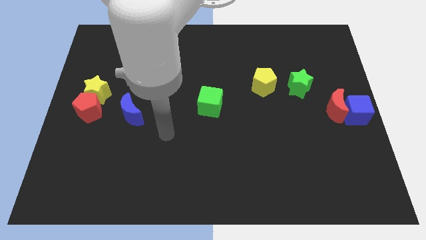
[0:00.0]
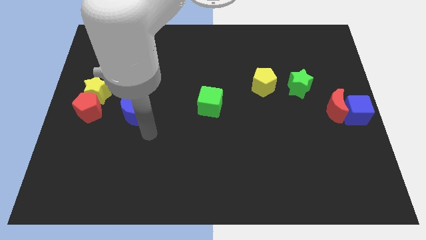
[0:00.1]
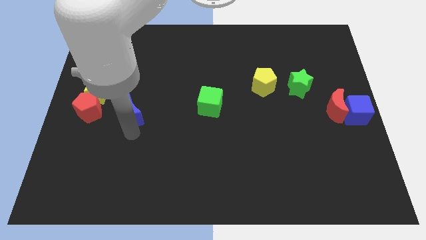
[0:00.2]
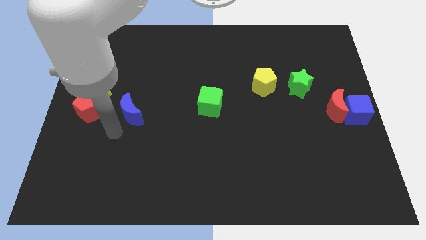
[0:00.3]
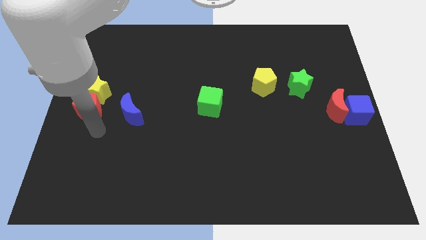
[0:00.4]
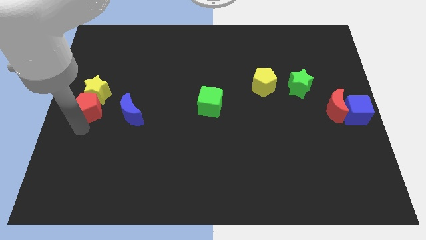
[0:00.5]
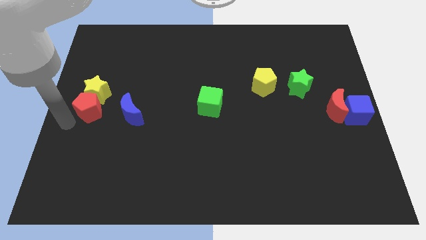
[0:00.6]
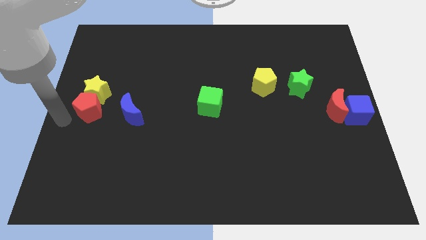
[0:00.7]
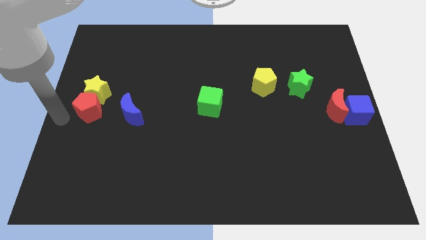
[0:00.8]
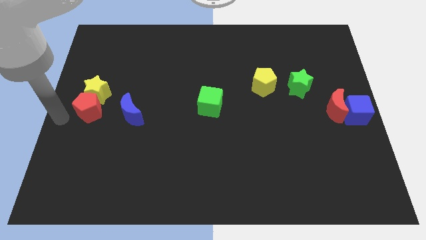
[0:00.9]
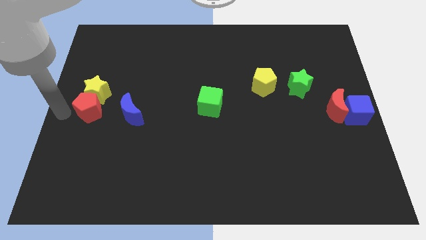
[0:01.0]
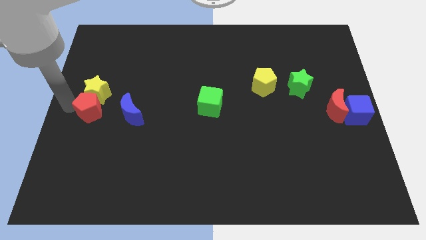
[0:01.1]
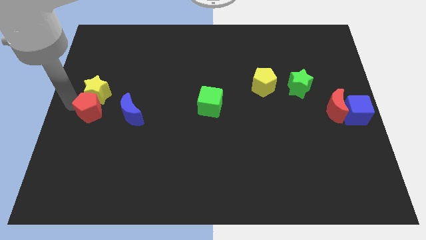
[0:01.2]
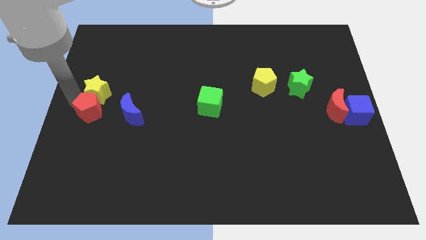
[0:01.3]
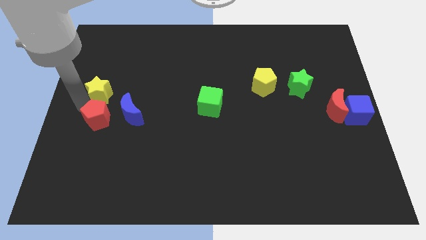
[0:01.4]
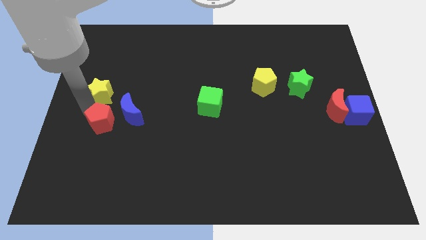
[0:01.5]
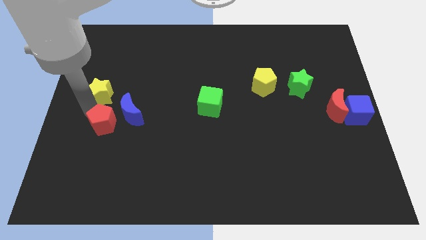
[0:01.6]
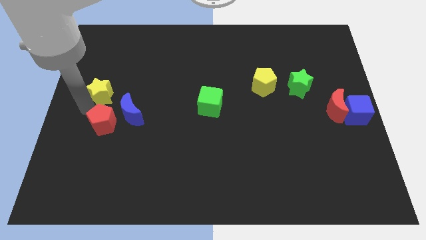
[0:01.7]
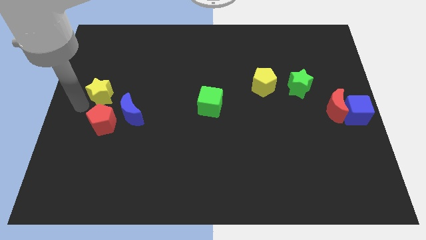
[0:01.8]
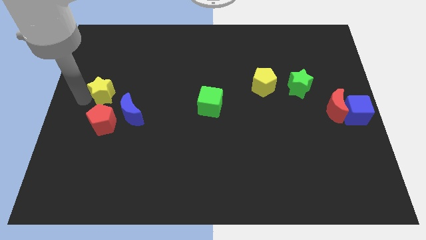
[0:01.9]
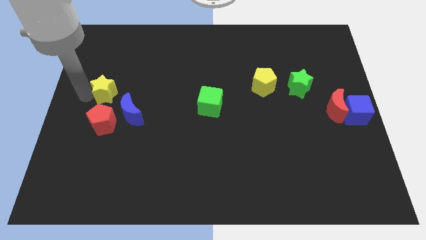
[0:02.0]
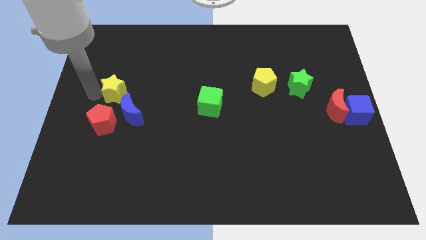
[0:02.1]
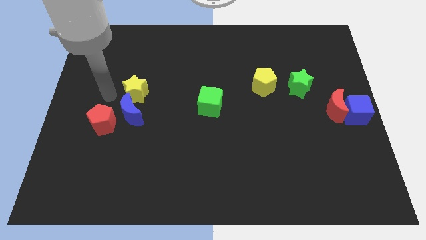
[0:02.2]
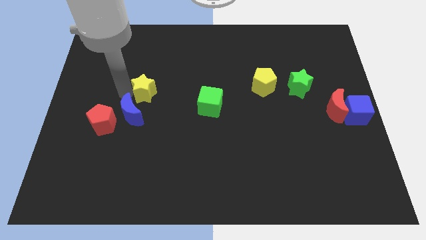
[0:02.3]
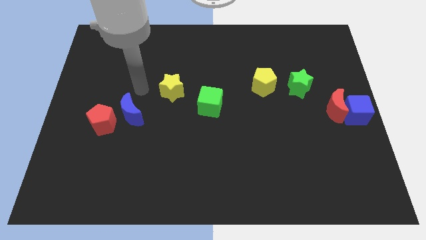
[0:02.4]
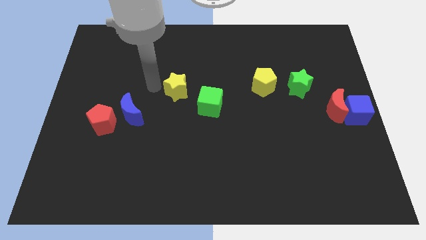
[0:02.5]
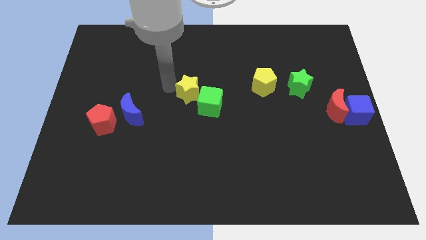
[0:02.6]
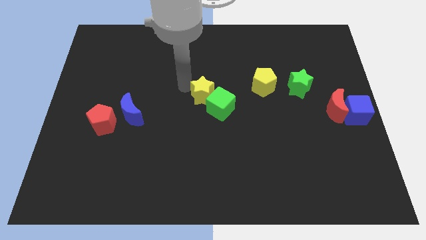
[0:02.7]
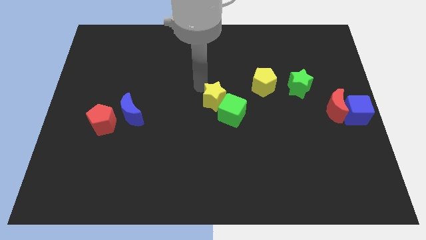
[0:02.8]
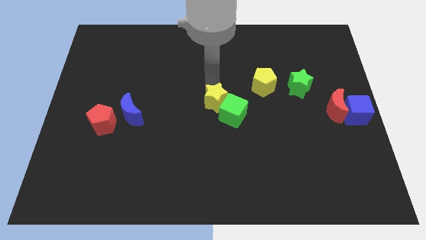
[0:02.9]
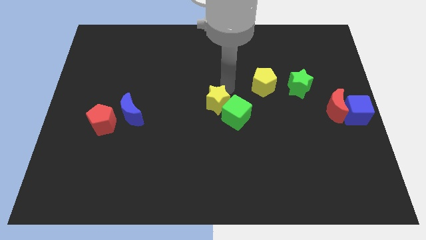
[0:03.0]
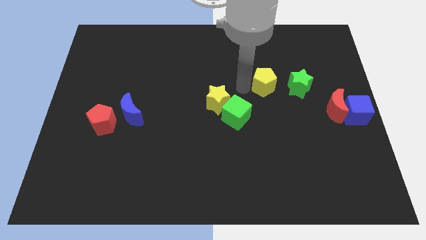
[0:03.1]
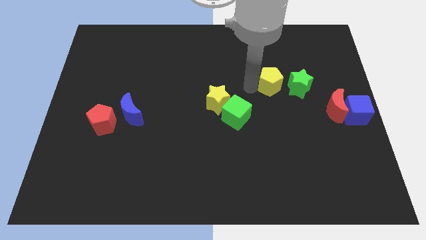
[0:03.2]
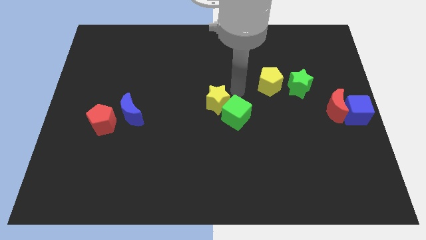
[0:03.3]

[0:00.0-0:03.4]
place the yellow star beside the blue moon

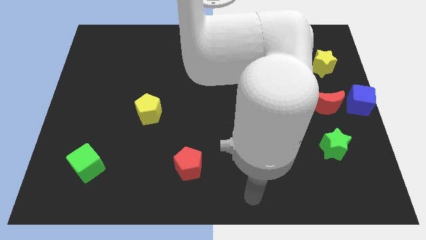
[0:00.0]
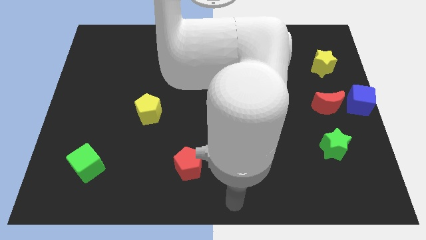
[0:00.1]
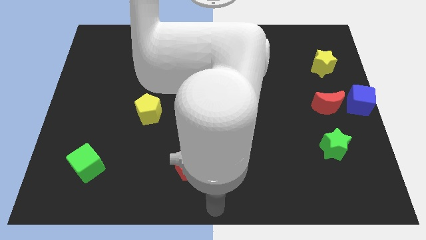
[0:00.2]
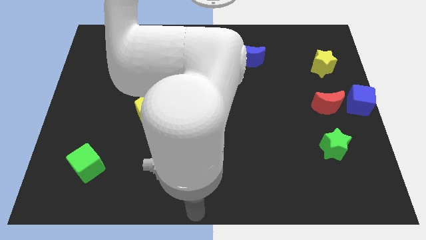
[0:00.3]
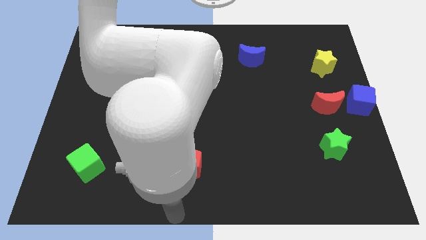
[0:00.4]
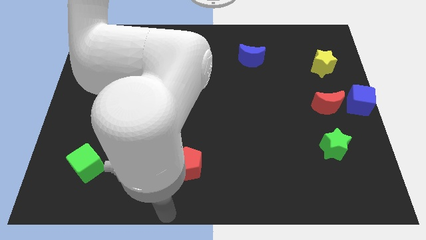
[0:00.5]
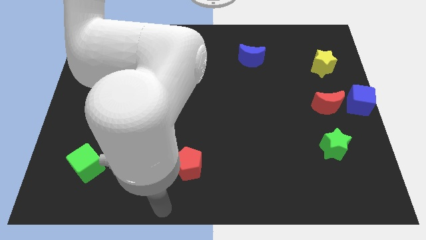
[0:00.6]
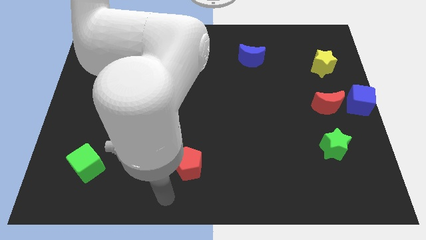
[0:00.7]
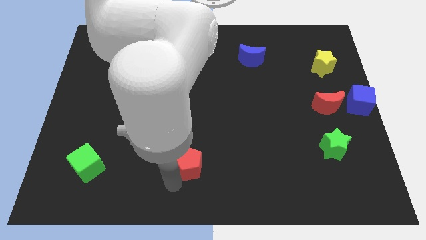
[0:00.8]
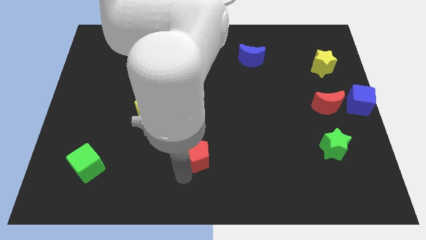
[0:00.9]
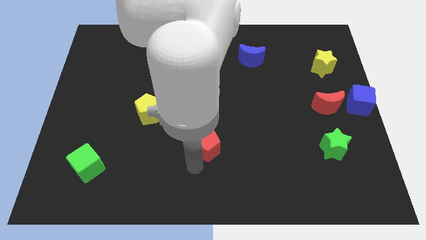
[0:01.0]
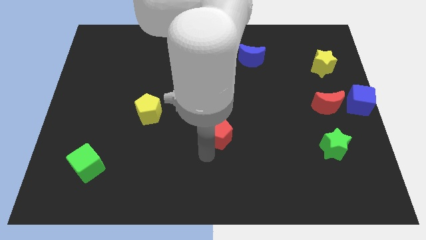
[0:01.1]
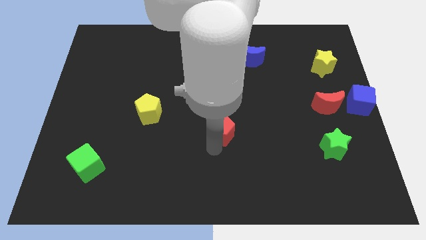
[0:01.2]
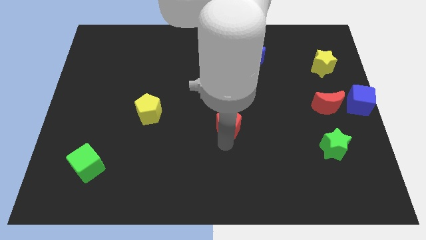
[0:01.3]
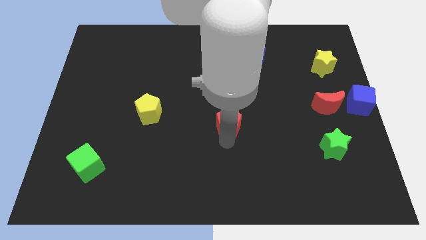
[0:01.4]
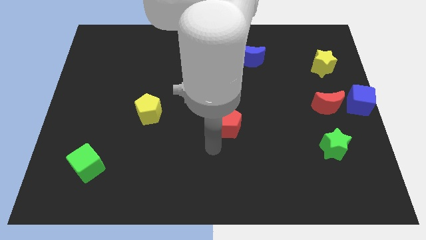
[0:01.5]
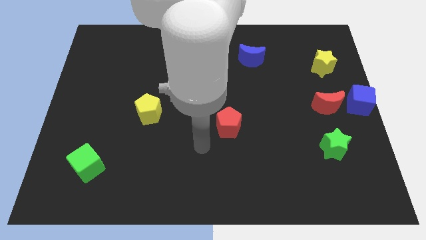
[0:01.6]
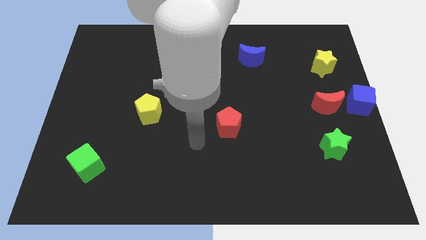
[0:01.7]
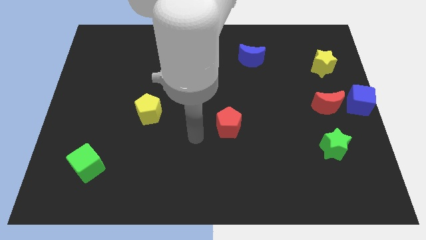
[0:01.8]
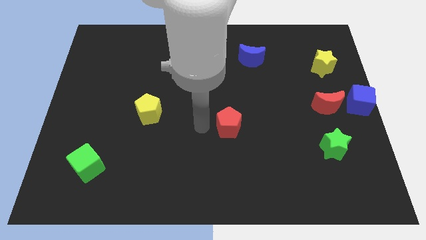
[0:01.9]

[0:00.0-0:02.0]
move the red pentagon to the right of yellow pentagon

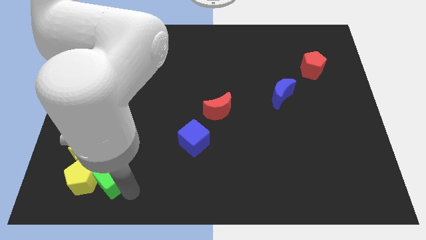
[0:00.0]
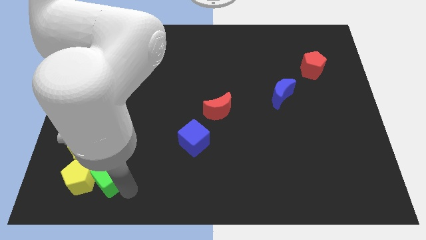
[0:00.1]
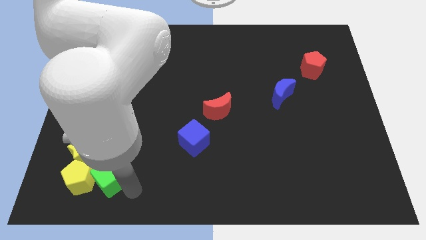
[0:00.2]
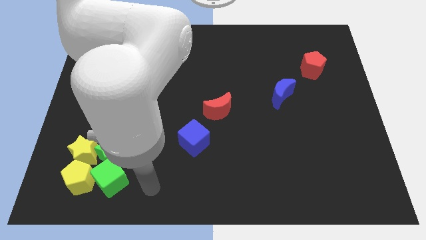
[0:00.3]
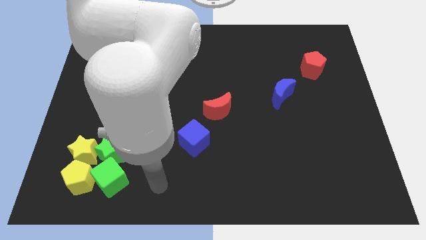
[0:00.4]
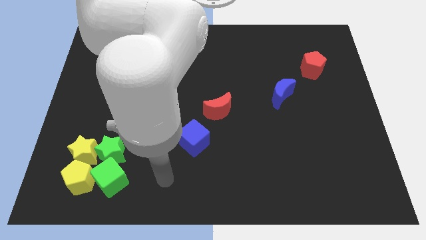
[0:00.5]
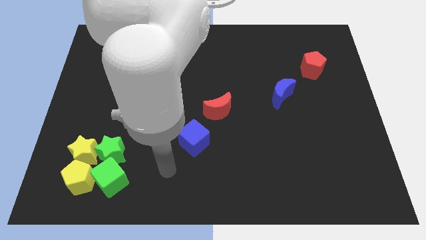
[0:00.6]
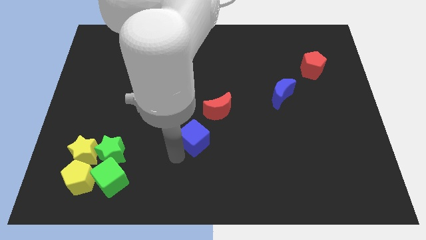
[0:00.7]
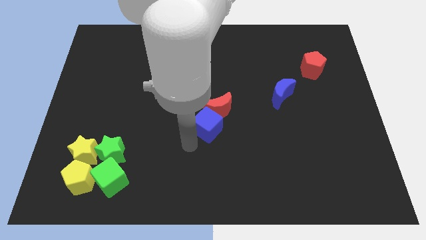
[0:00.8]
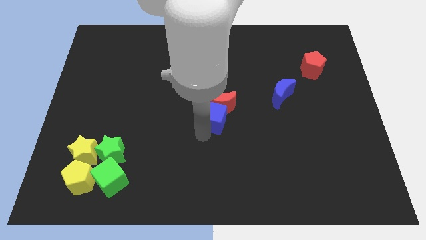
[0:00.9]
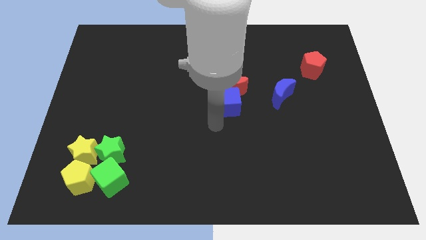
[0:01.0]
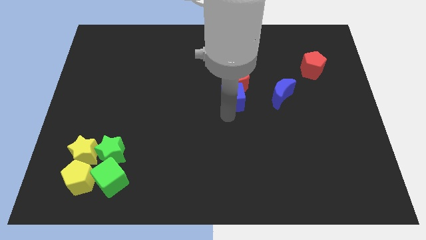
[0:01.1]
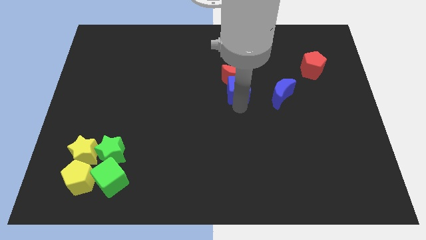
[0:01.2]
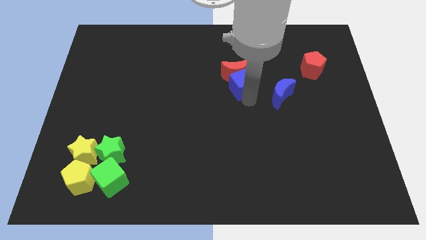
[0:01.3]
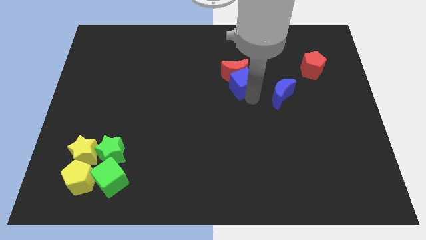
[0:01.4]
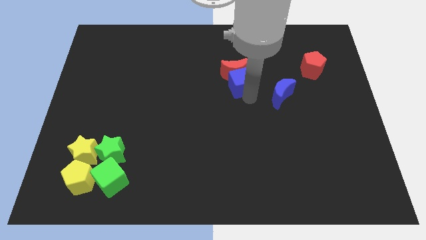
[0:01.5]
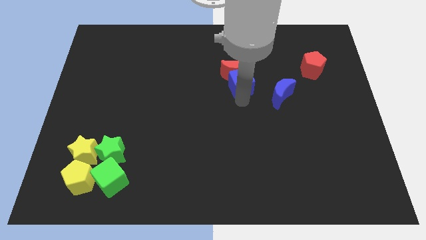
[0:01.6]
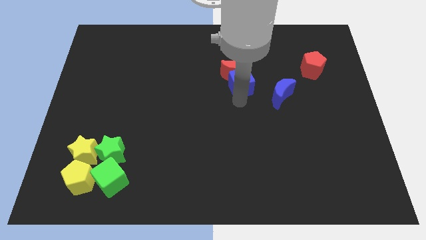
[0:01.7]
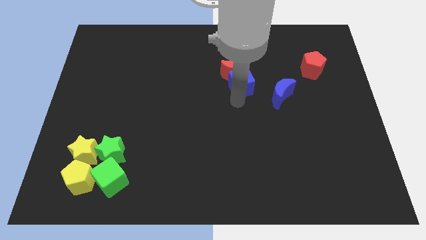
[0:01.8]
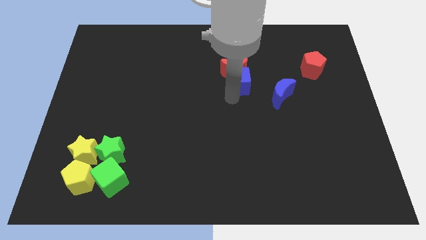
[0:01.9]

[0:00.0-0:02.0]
move the blue cube along with the red crescent left to the blue crescent

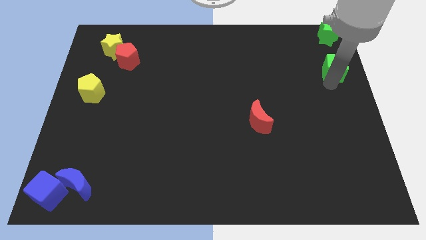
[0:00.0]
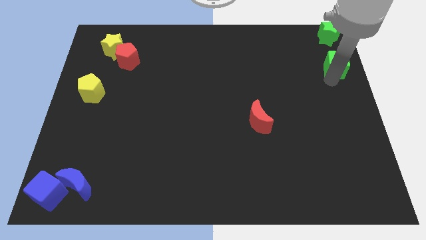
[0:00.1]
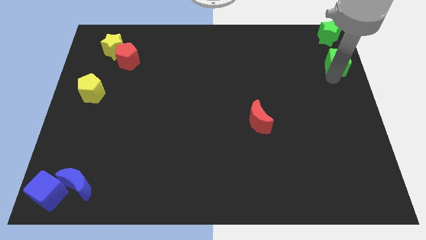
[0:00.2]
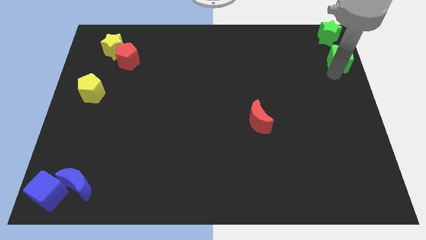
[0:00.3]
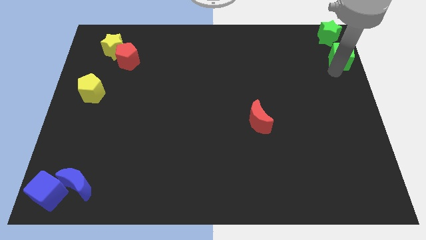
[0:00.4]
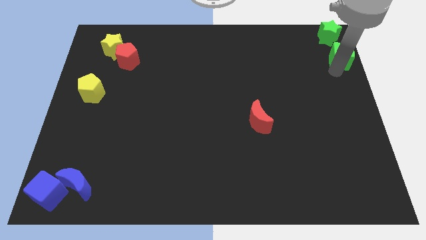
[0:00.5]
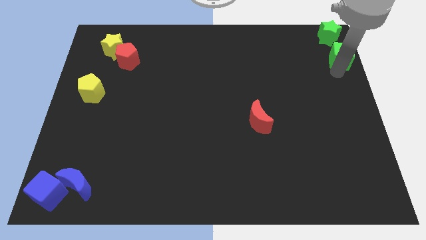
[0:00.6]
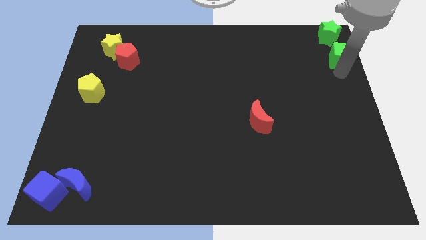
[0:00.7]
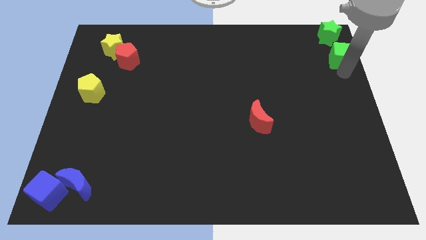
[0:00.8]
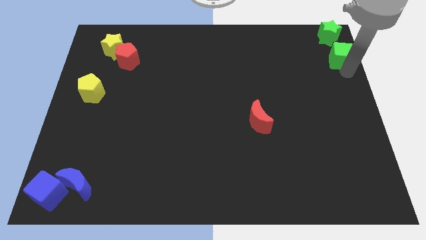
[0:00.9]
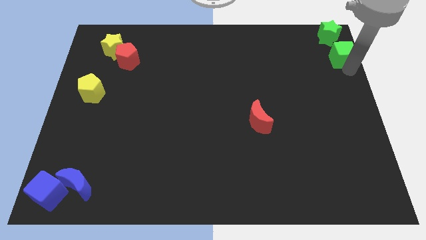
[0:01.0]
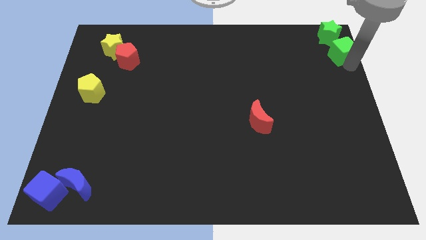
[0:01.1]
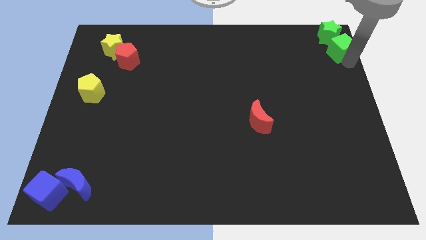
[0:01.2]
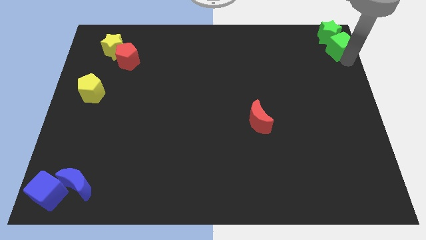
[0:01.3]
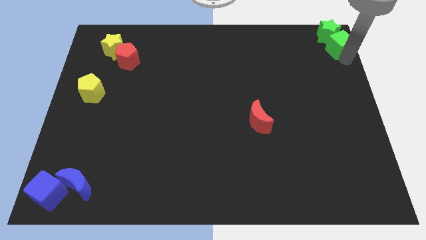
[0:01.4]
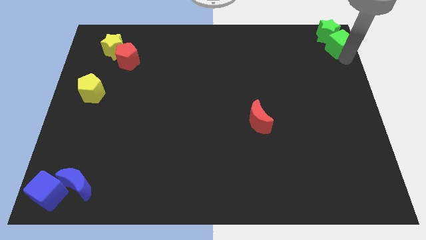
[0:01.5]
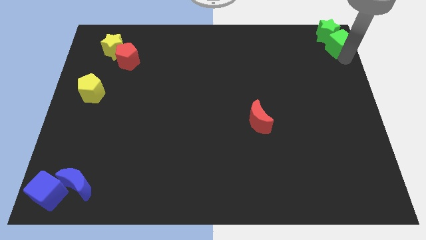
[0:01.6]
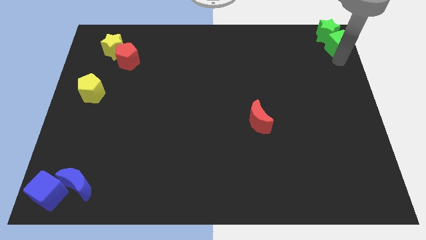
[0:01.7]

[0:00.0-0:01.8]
slide the green cube into the bottom of the green star
